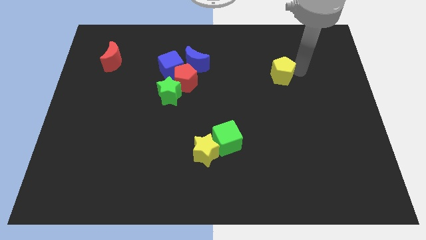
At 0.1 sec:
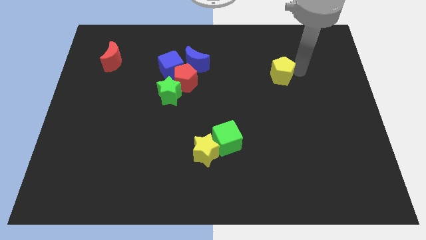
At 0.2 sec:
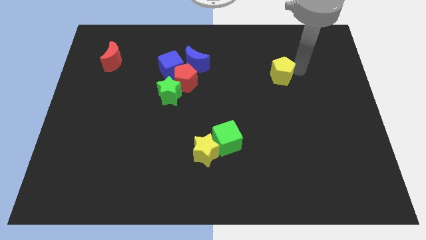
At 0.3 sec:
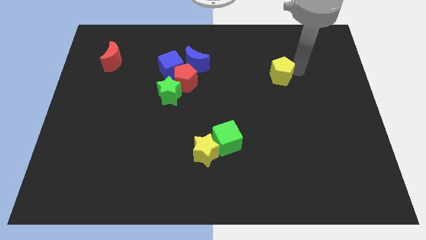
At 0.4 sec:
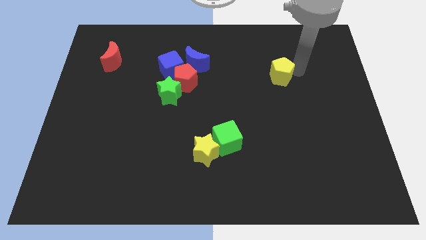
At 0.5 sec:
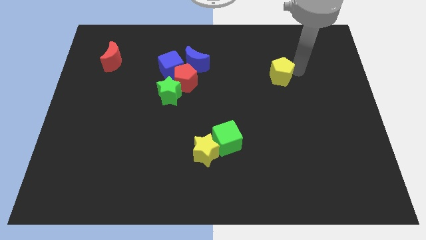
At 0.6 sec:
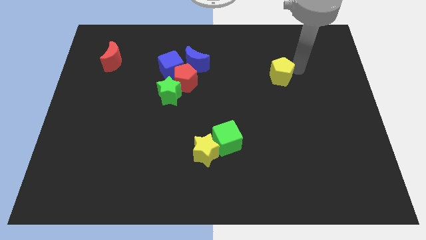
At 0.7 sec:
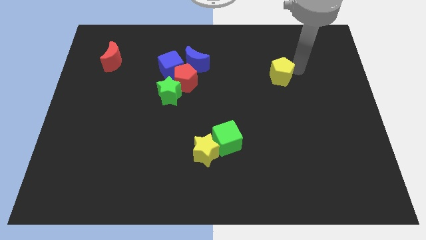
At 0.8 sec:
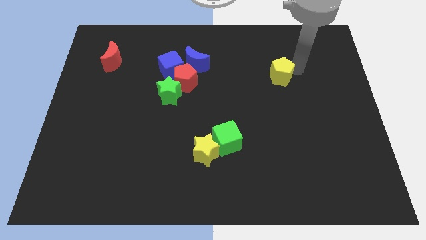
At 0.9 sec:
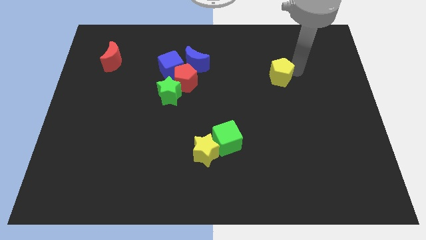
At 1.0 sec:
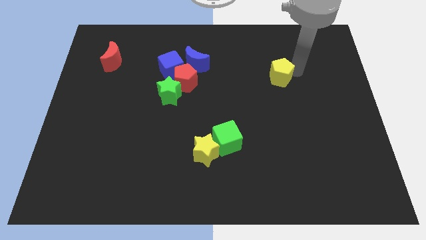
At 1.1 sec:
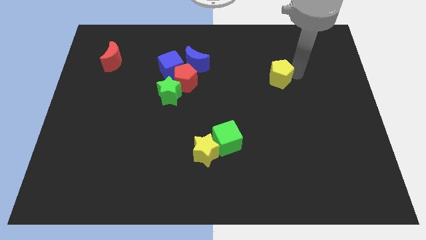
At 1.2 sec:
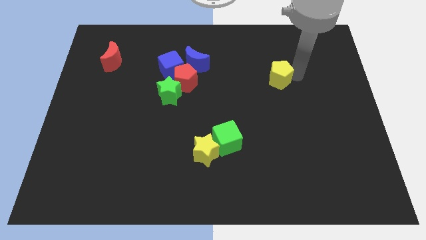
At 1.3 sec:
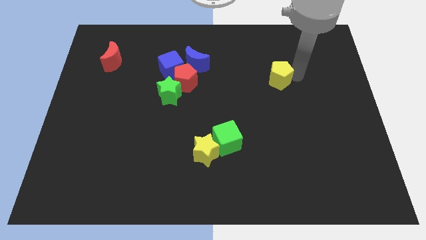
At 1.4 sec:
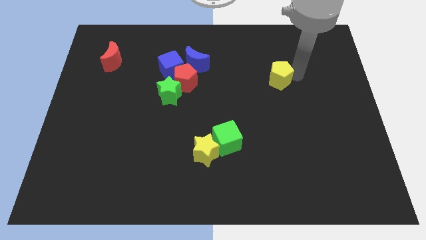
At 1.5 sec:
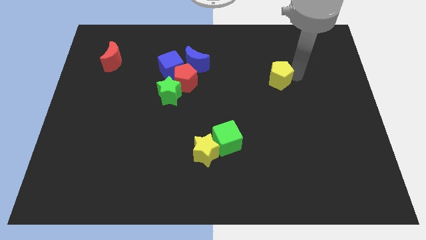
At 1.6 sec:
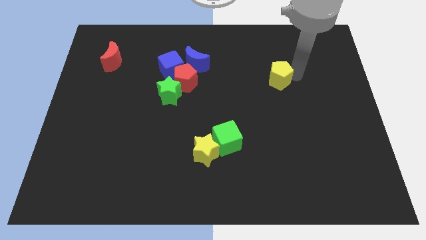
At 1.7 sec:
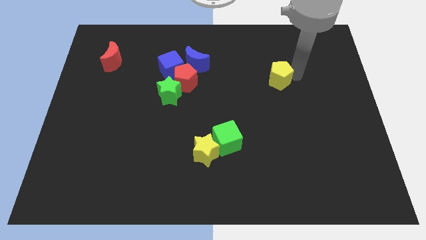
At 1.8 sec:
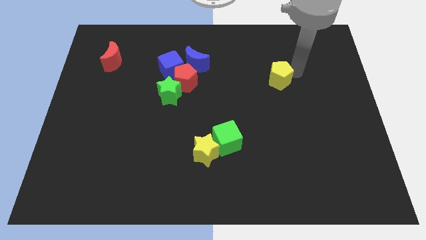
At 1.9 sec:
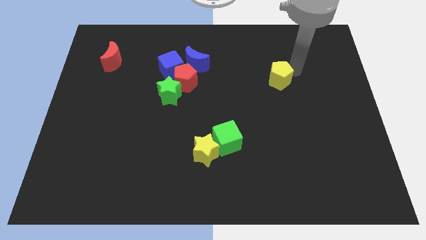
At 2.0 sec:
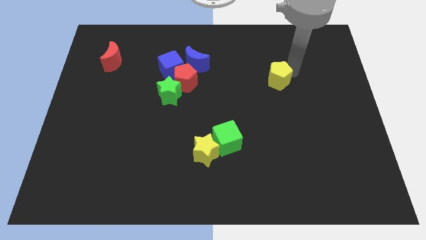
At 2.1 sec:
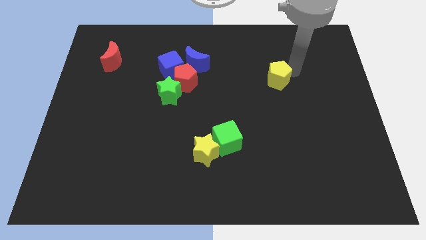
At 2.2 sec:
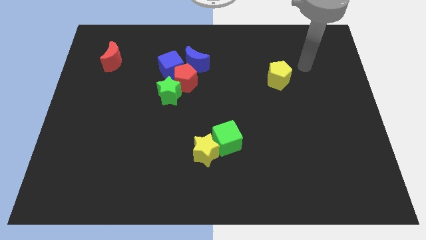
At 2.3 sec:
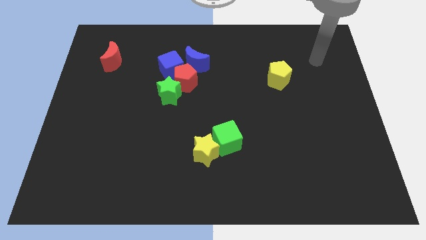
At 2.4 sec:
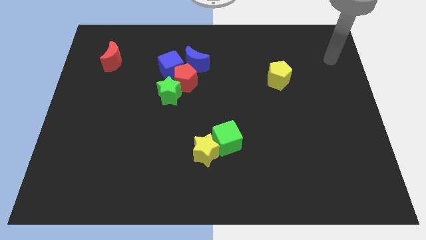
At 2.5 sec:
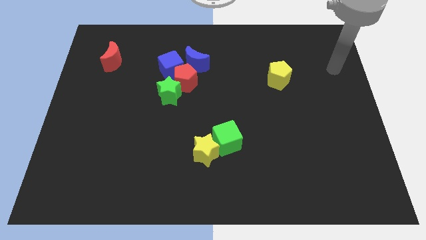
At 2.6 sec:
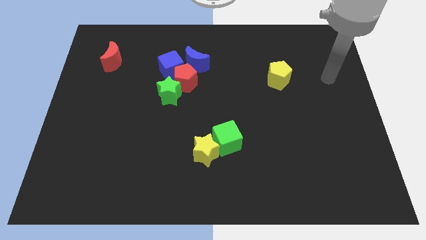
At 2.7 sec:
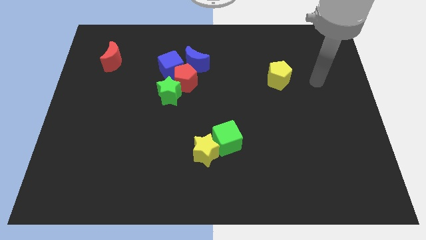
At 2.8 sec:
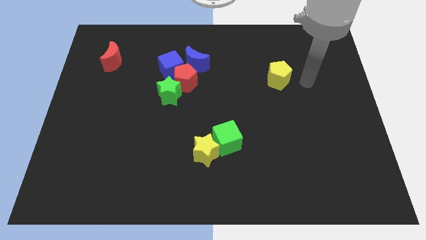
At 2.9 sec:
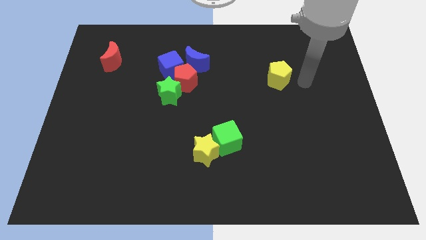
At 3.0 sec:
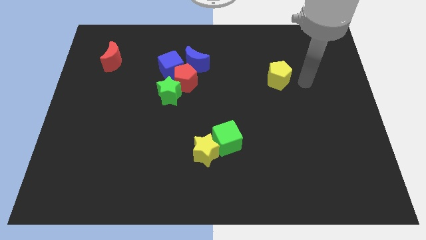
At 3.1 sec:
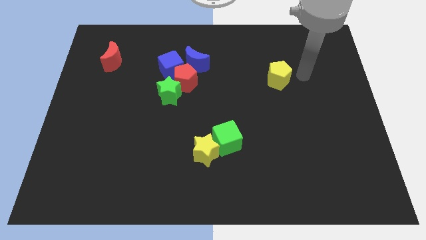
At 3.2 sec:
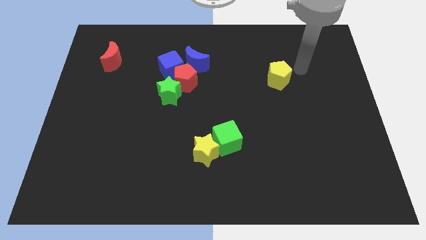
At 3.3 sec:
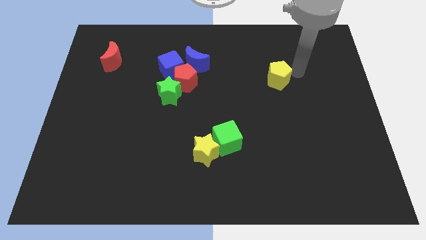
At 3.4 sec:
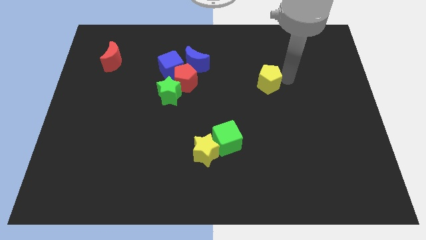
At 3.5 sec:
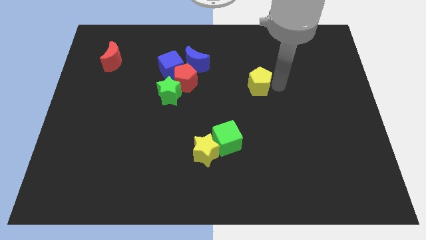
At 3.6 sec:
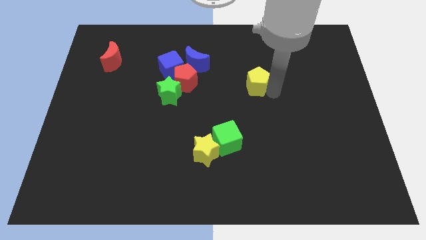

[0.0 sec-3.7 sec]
push the yellow pentagon parallel to right of the red pentagon

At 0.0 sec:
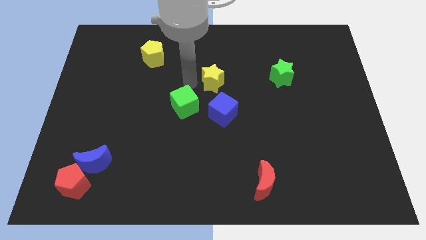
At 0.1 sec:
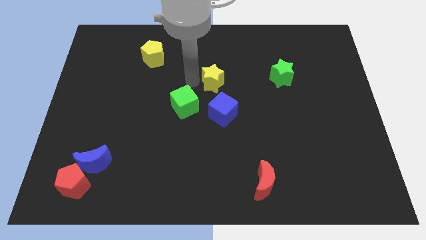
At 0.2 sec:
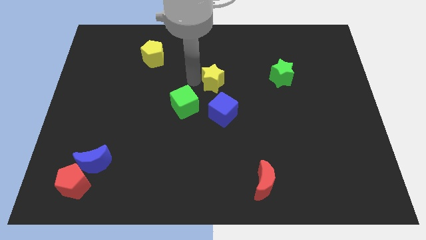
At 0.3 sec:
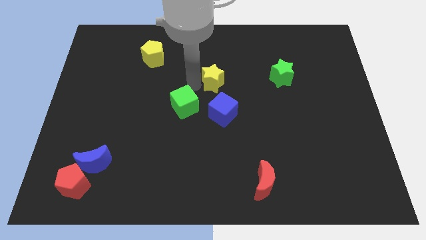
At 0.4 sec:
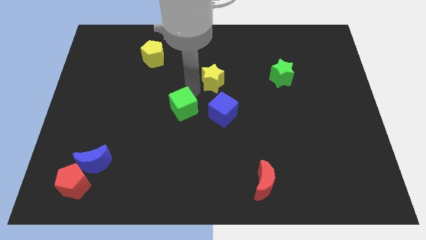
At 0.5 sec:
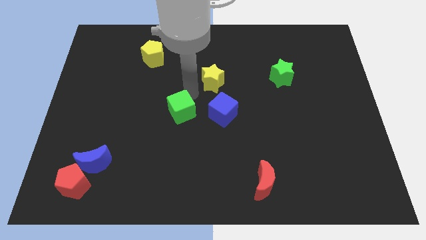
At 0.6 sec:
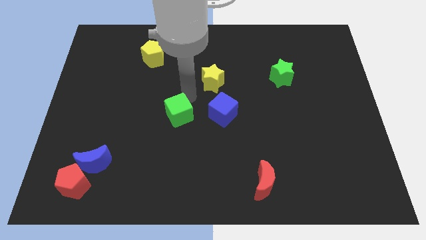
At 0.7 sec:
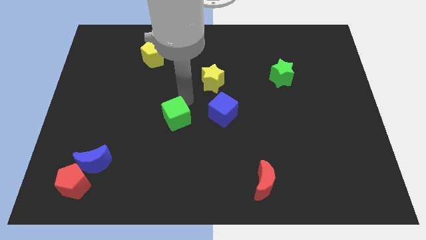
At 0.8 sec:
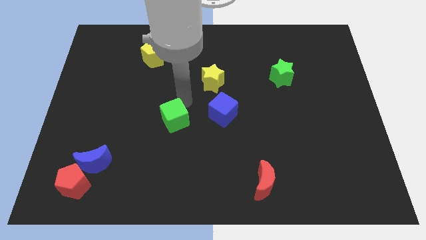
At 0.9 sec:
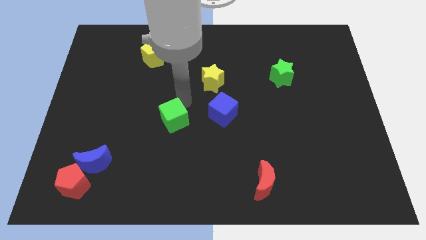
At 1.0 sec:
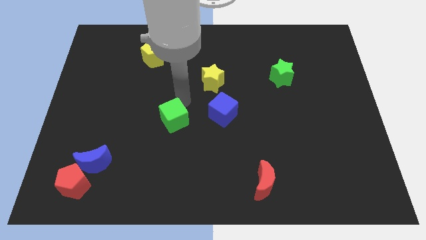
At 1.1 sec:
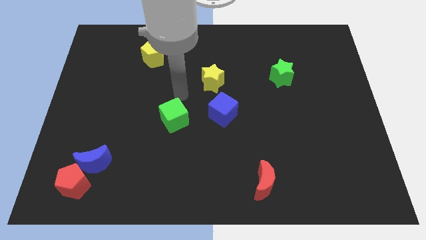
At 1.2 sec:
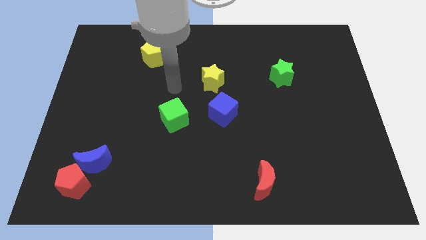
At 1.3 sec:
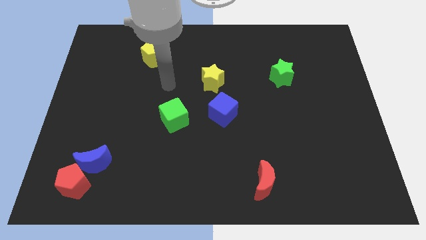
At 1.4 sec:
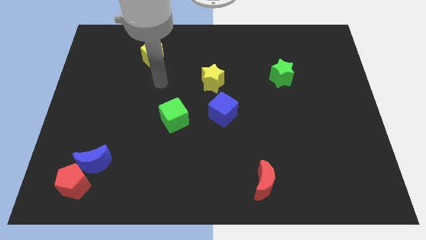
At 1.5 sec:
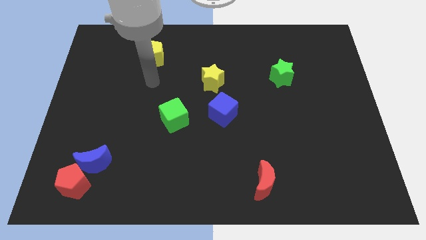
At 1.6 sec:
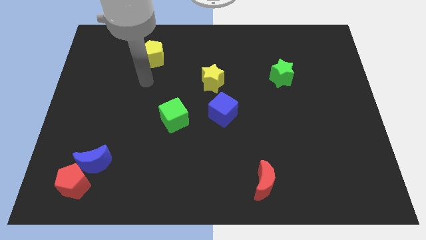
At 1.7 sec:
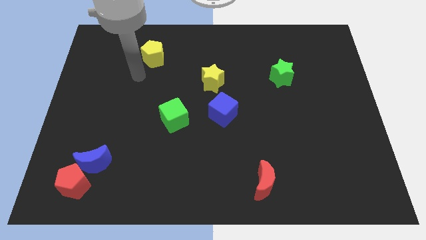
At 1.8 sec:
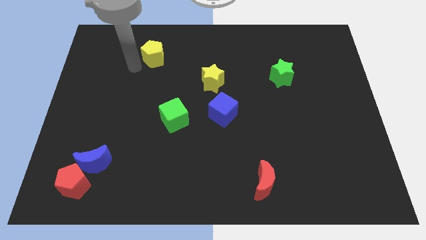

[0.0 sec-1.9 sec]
slightly push the green cube towards bottom of the board

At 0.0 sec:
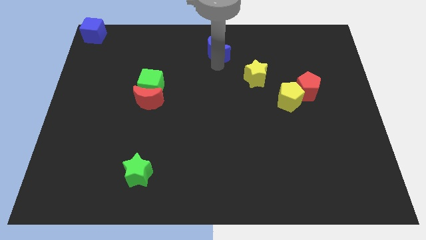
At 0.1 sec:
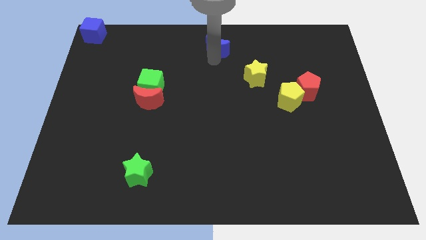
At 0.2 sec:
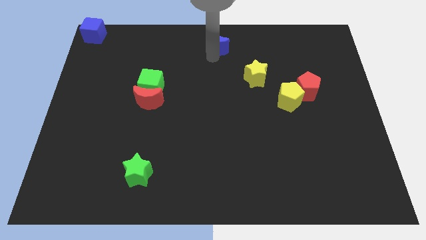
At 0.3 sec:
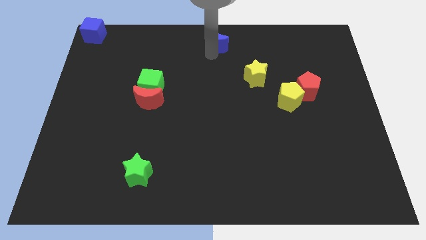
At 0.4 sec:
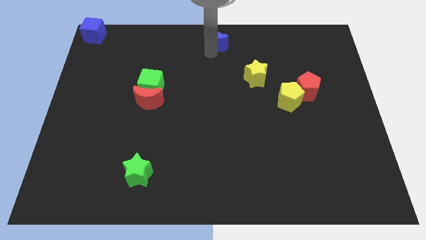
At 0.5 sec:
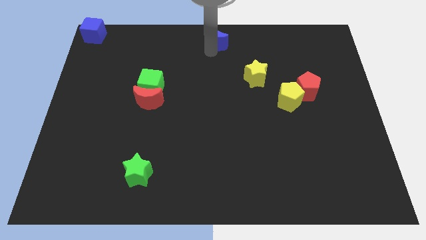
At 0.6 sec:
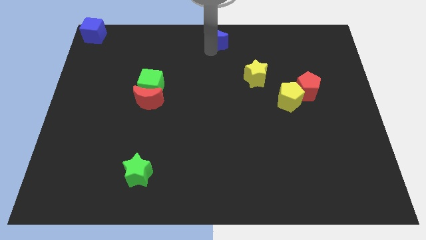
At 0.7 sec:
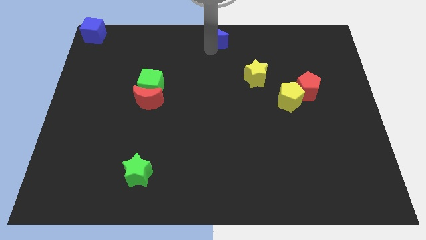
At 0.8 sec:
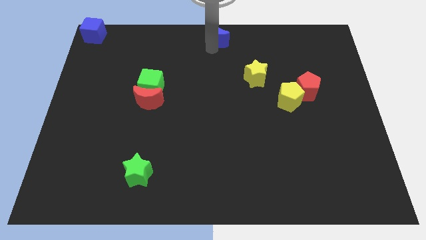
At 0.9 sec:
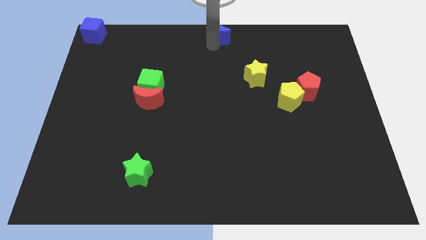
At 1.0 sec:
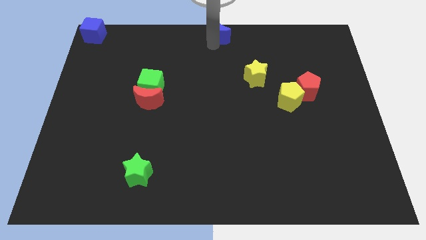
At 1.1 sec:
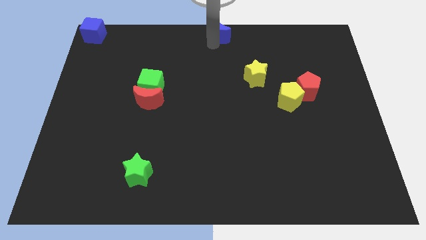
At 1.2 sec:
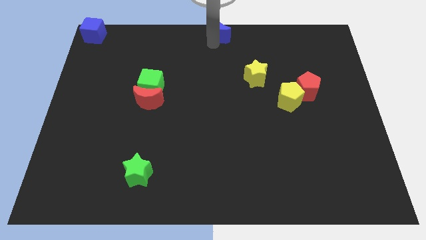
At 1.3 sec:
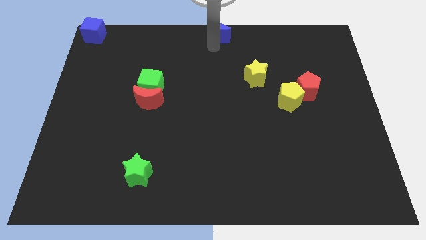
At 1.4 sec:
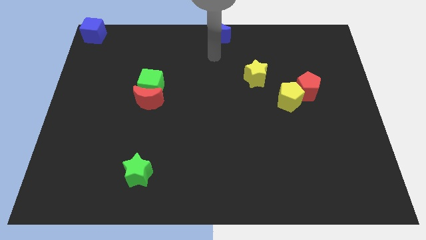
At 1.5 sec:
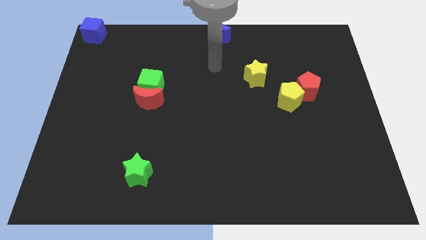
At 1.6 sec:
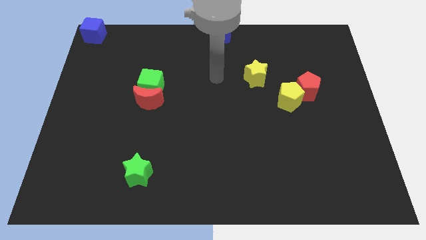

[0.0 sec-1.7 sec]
place the blue crescent at the top center of the board

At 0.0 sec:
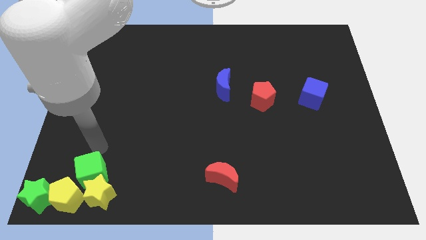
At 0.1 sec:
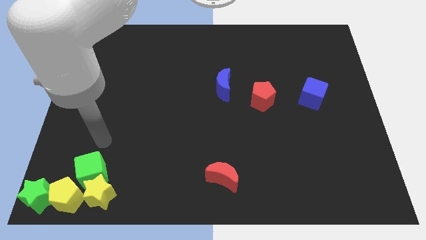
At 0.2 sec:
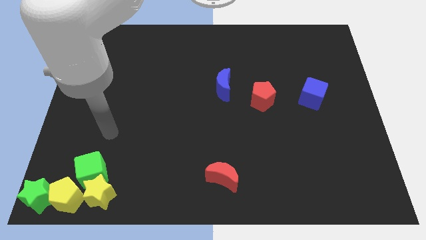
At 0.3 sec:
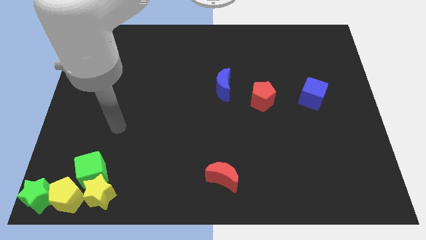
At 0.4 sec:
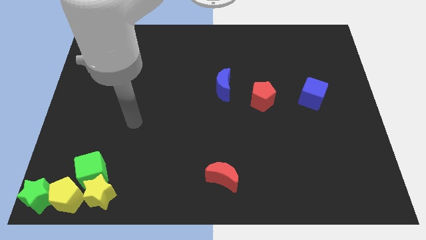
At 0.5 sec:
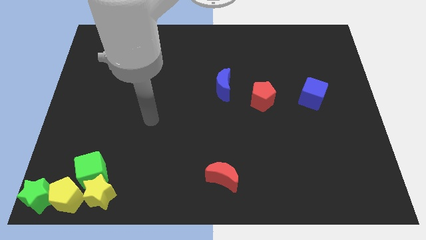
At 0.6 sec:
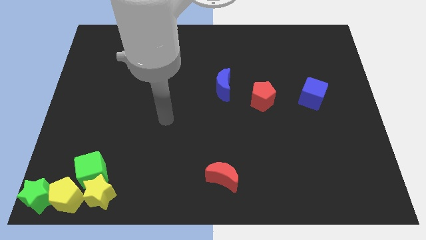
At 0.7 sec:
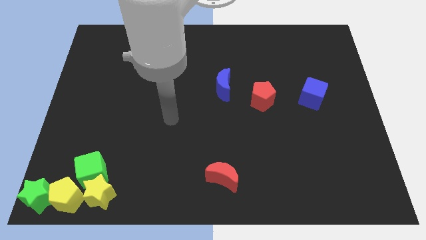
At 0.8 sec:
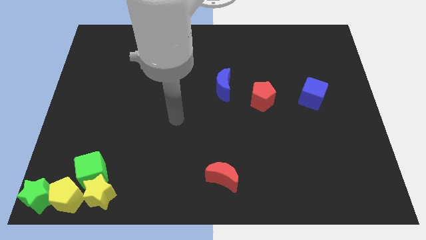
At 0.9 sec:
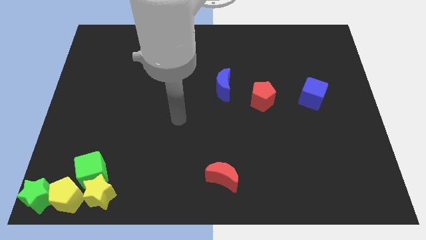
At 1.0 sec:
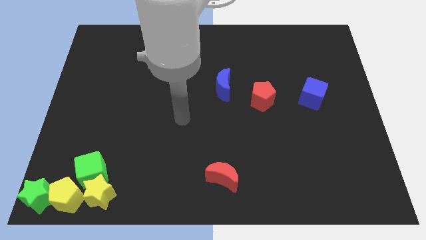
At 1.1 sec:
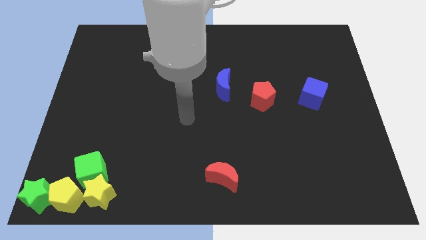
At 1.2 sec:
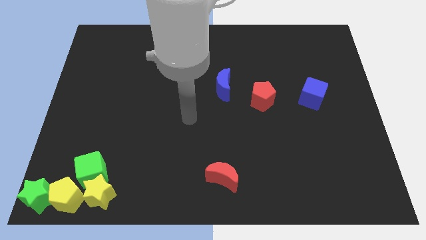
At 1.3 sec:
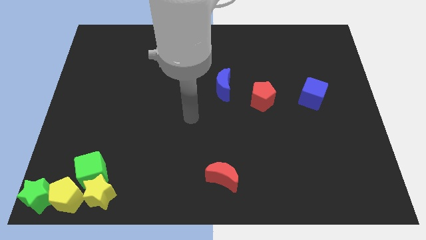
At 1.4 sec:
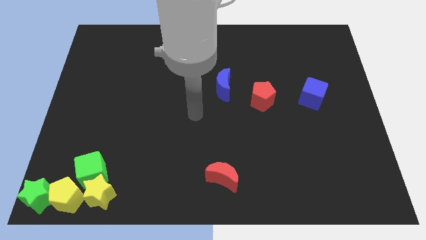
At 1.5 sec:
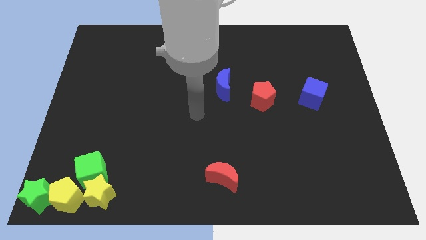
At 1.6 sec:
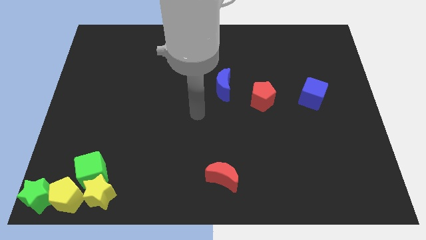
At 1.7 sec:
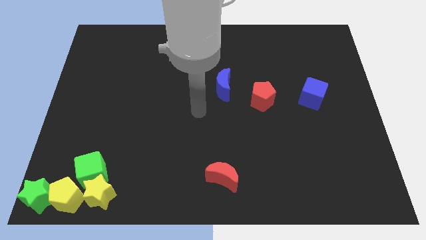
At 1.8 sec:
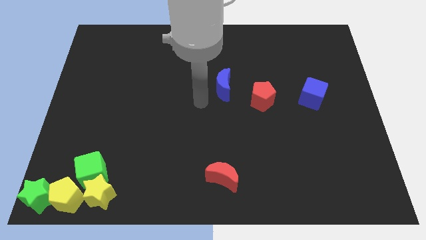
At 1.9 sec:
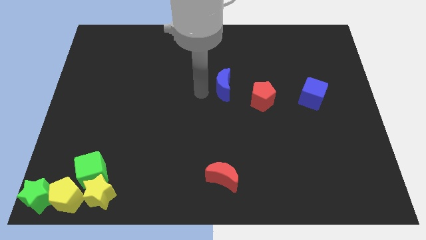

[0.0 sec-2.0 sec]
move your arm at the center of the board
